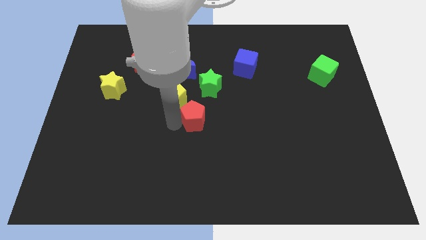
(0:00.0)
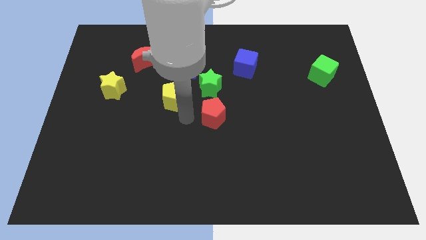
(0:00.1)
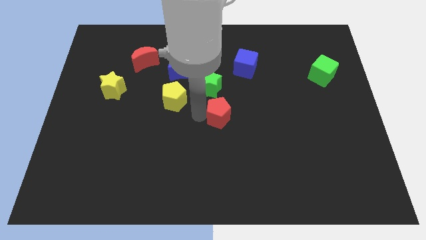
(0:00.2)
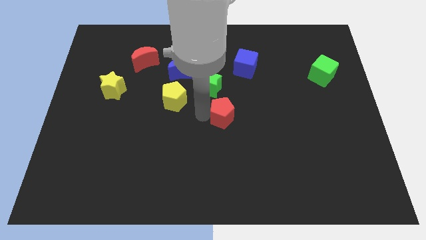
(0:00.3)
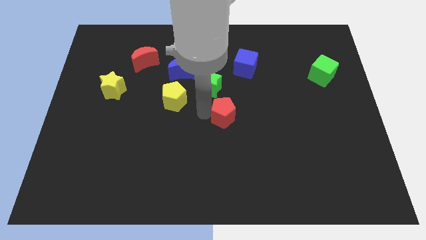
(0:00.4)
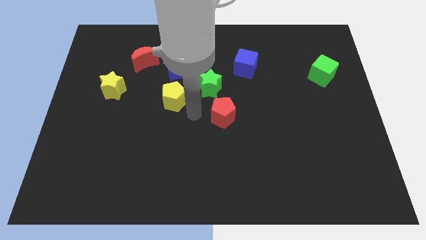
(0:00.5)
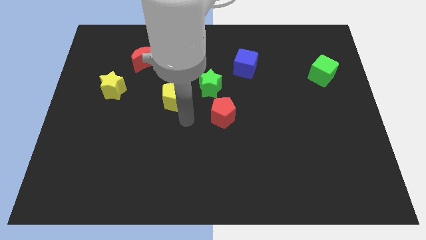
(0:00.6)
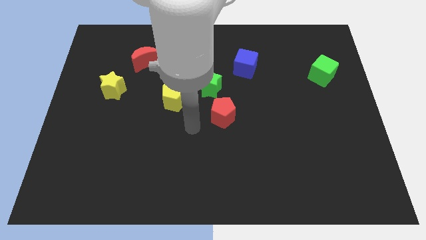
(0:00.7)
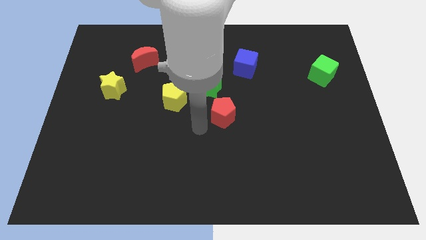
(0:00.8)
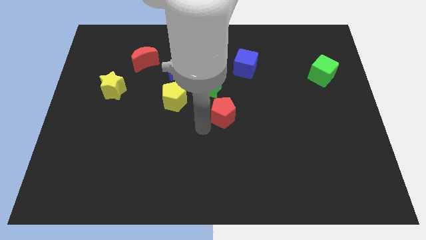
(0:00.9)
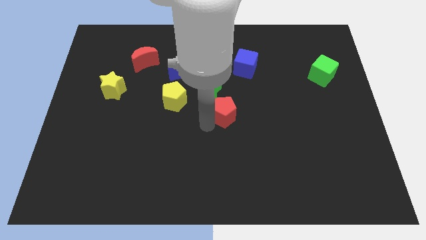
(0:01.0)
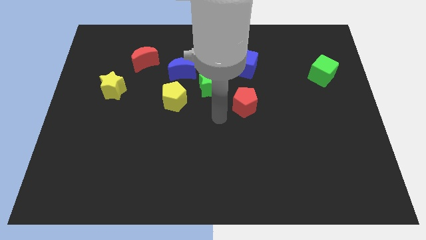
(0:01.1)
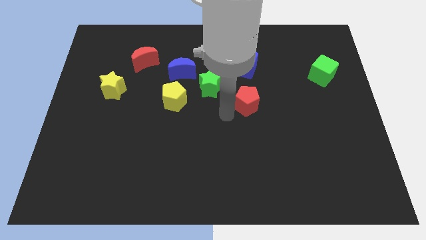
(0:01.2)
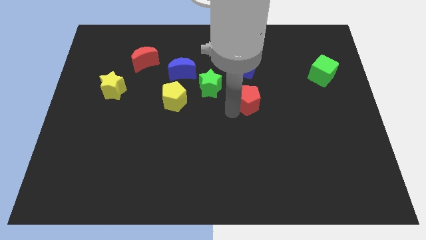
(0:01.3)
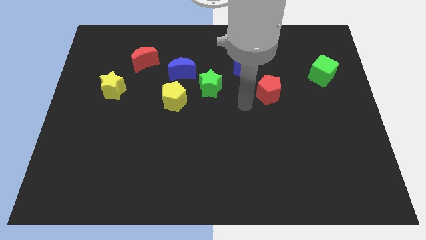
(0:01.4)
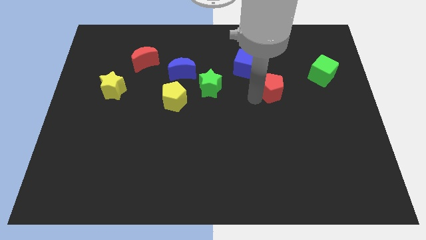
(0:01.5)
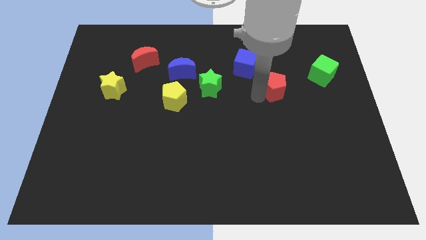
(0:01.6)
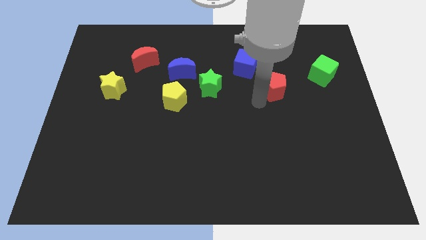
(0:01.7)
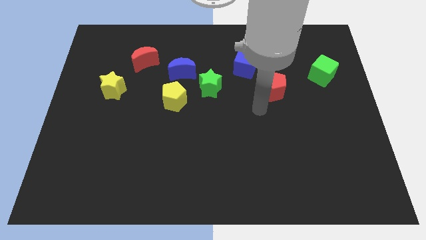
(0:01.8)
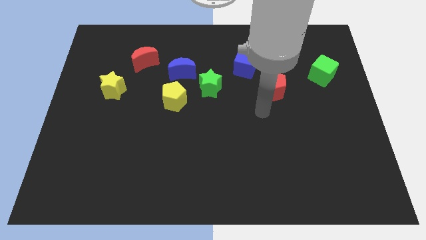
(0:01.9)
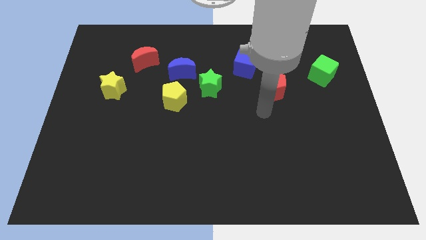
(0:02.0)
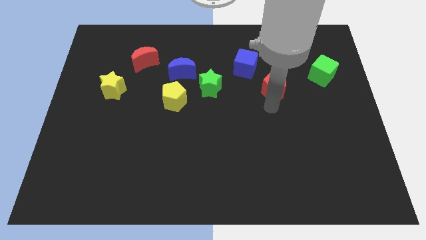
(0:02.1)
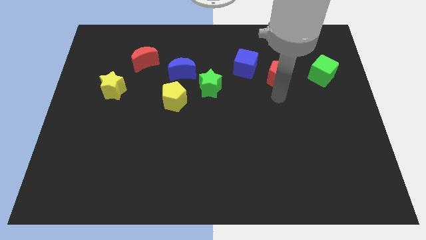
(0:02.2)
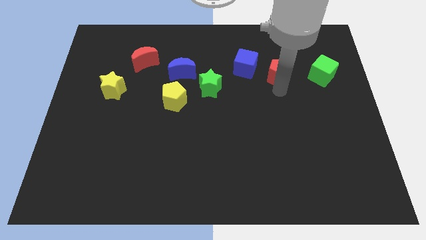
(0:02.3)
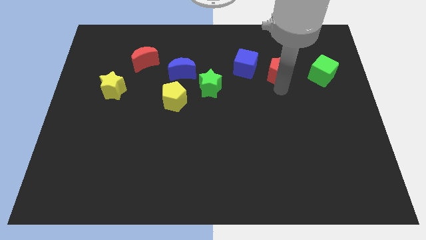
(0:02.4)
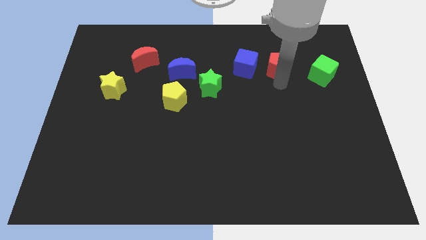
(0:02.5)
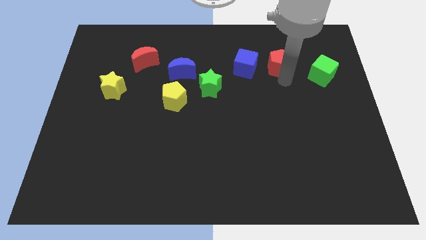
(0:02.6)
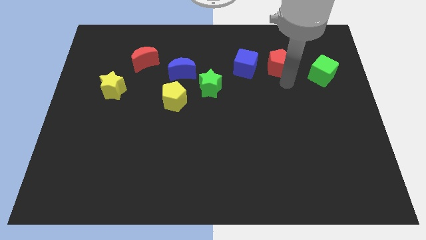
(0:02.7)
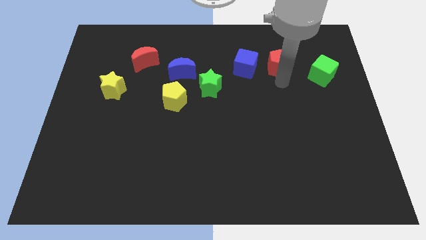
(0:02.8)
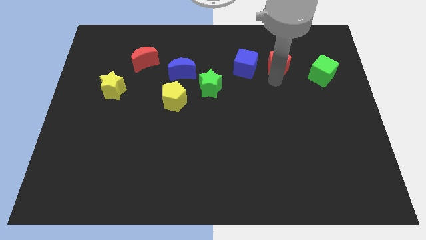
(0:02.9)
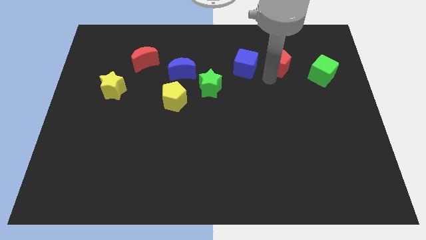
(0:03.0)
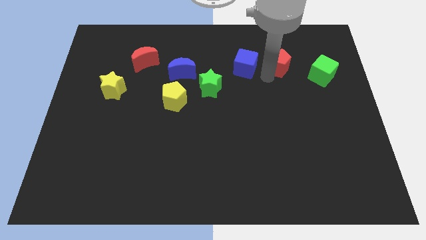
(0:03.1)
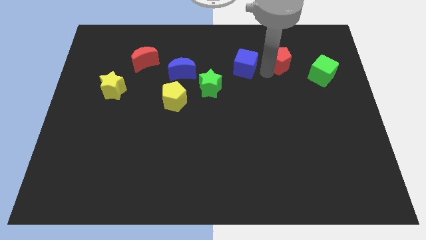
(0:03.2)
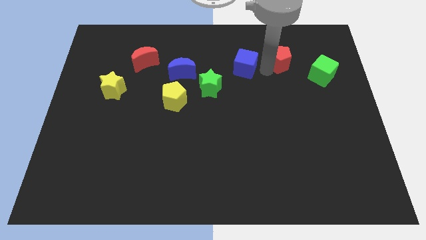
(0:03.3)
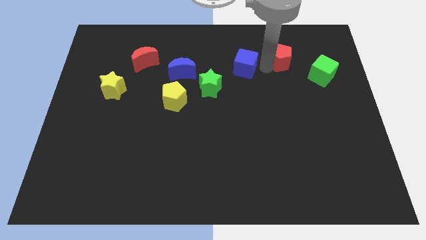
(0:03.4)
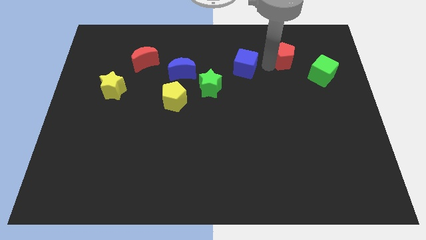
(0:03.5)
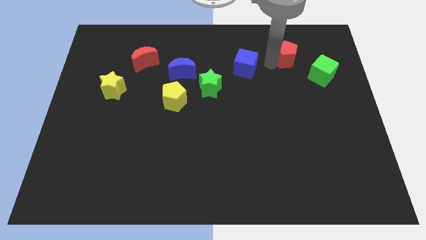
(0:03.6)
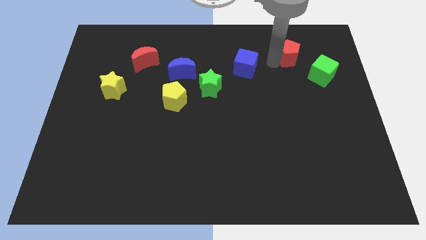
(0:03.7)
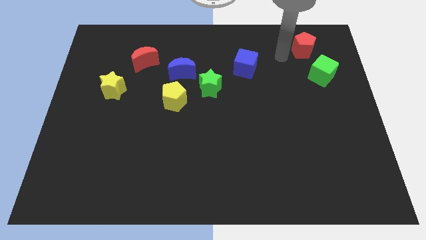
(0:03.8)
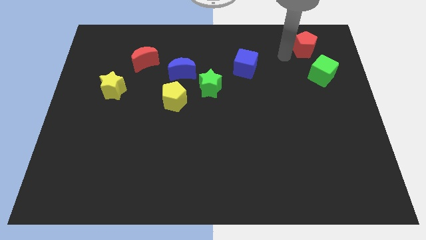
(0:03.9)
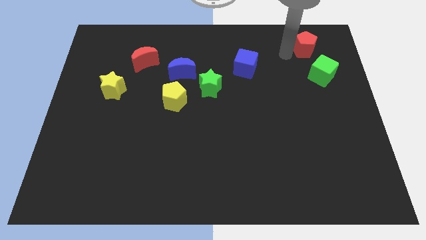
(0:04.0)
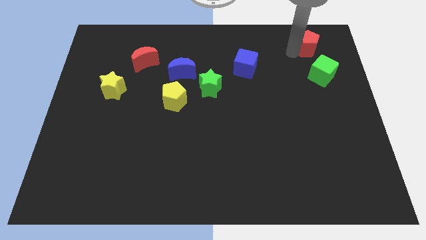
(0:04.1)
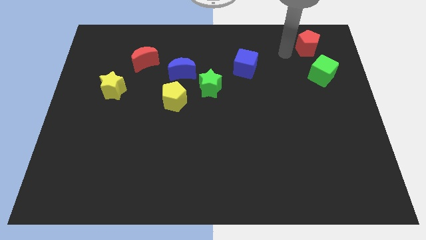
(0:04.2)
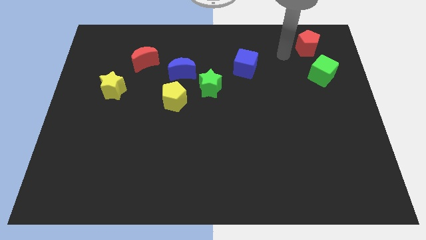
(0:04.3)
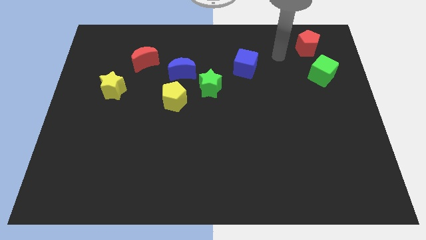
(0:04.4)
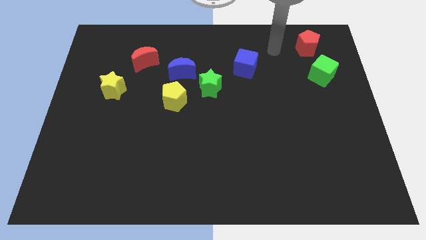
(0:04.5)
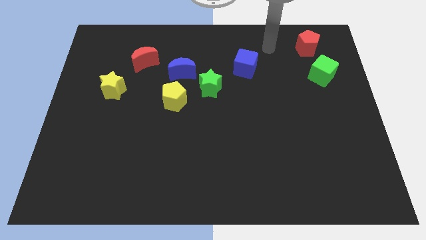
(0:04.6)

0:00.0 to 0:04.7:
place the red pentagon above green cube

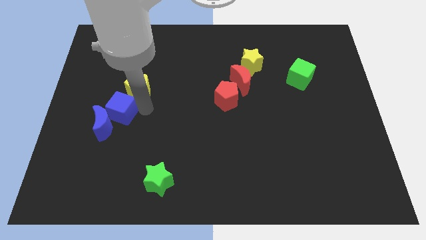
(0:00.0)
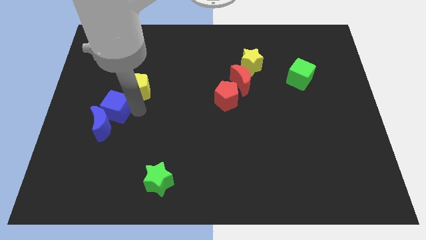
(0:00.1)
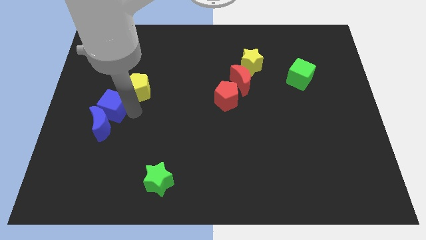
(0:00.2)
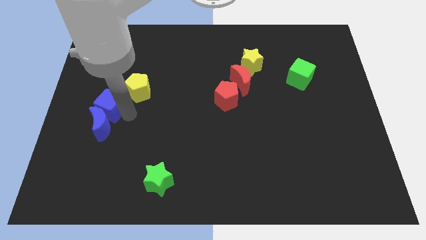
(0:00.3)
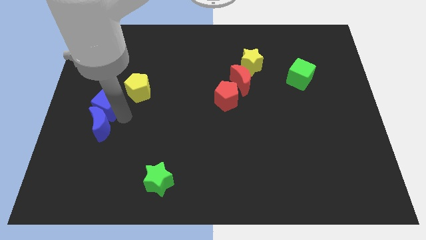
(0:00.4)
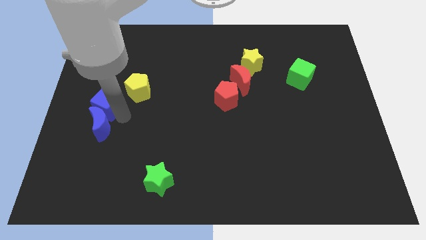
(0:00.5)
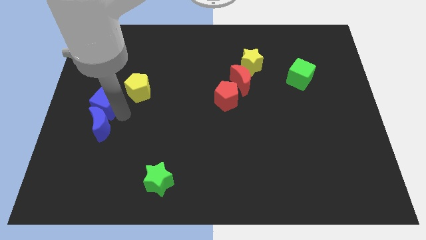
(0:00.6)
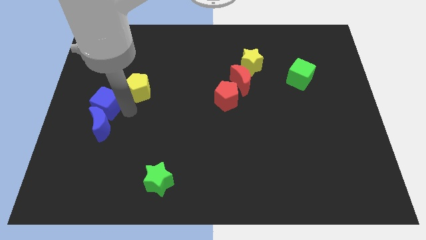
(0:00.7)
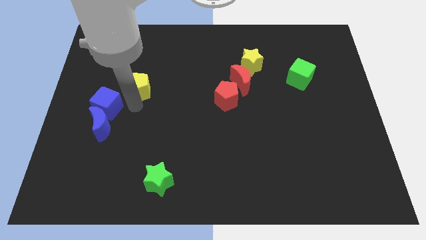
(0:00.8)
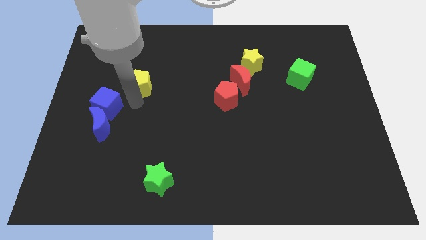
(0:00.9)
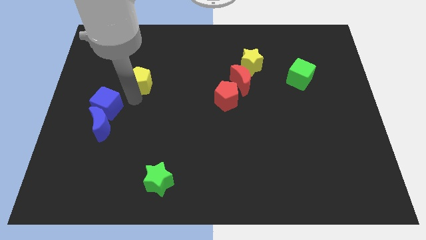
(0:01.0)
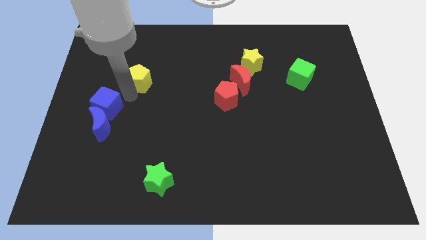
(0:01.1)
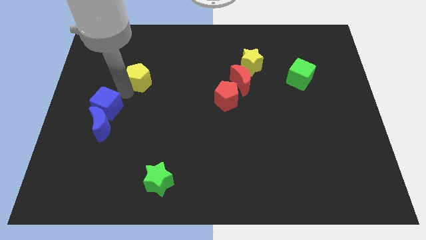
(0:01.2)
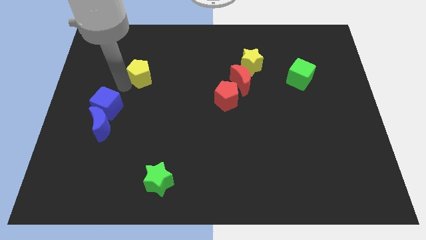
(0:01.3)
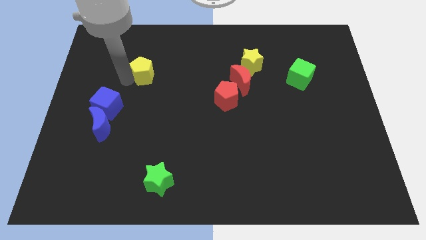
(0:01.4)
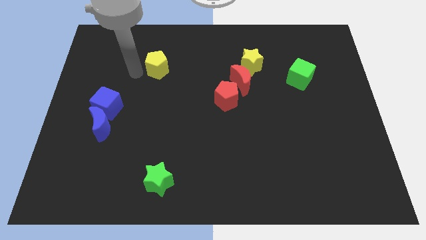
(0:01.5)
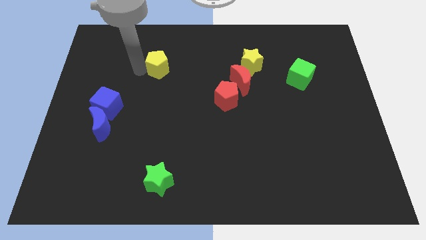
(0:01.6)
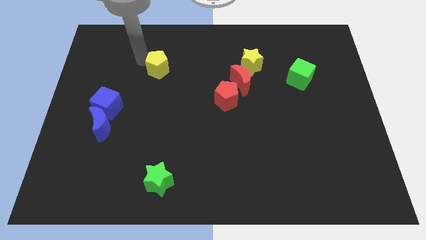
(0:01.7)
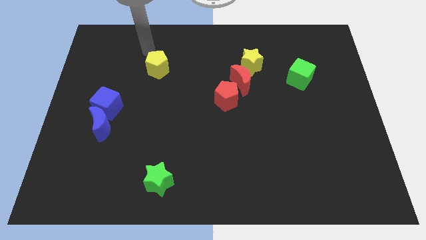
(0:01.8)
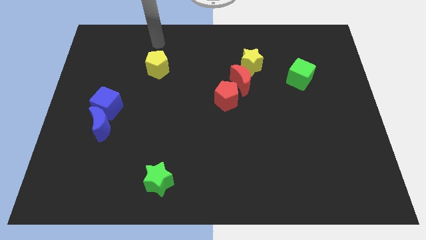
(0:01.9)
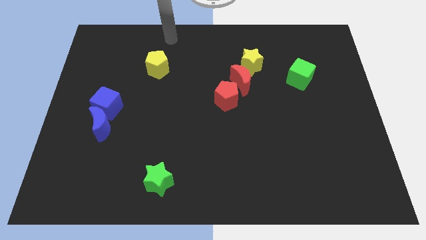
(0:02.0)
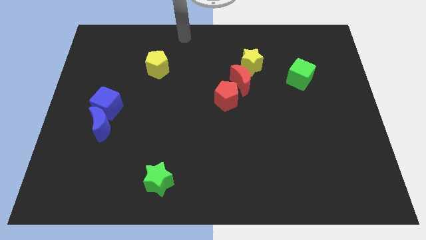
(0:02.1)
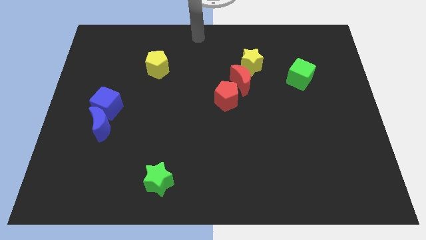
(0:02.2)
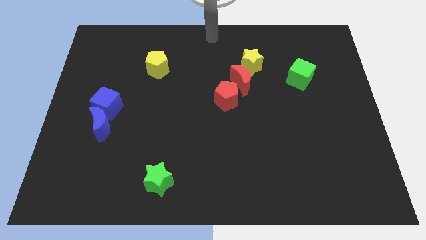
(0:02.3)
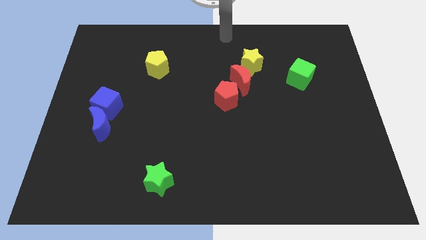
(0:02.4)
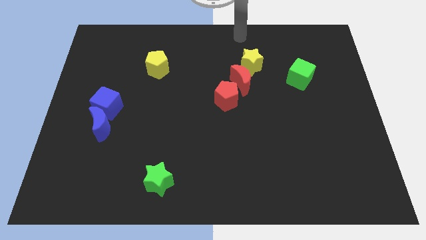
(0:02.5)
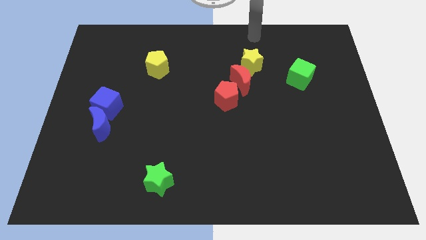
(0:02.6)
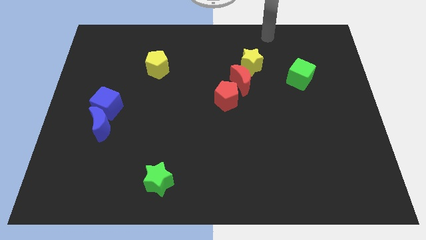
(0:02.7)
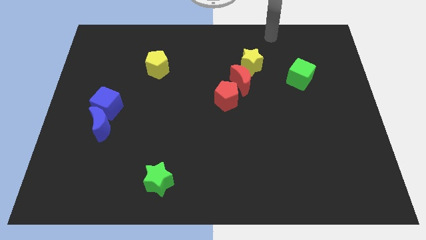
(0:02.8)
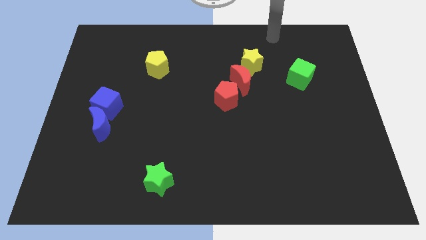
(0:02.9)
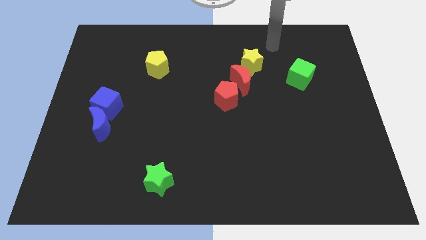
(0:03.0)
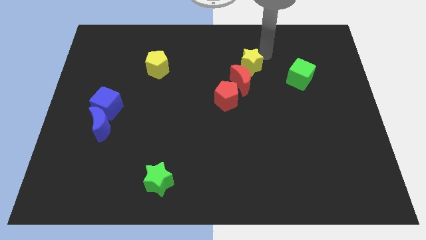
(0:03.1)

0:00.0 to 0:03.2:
move the yellow pentagon away from the blue cube

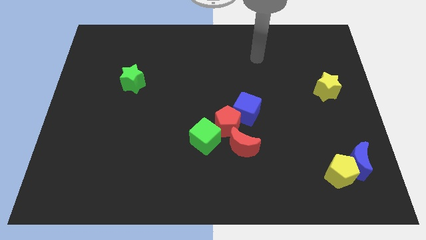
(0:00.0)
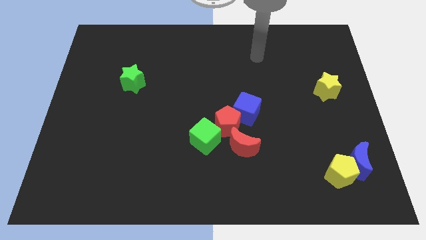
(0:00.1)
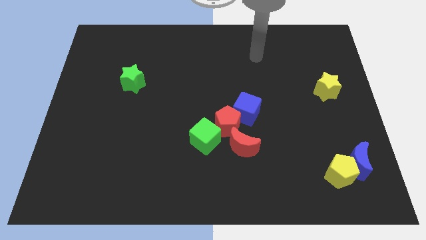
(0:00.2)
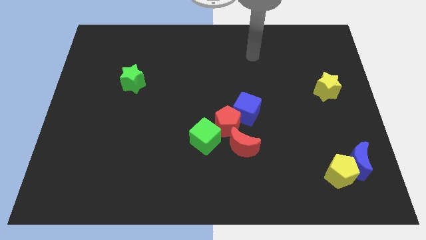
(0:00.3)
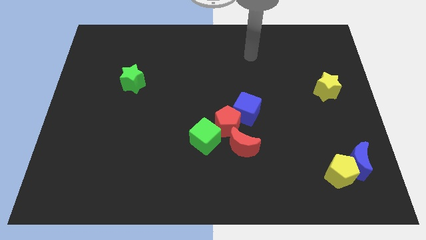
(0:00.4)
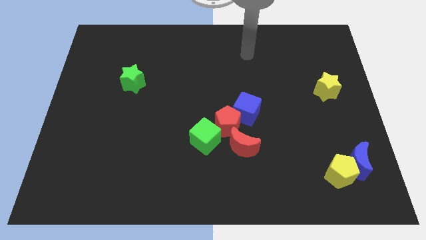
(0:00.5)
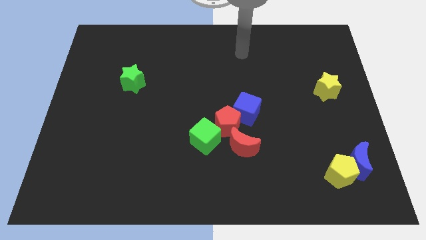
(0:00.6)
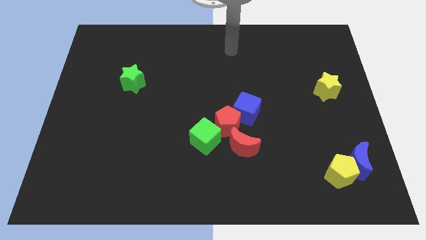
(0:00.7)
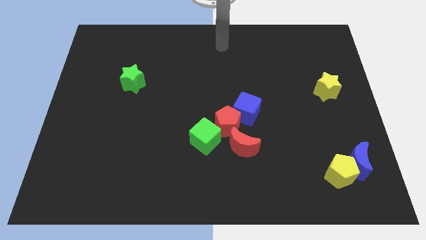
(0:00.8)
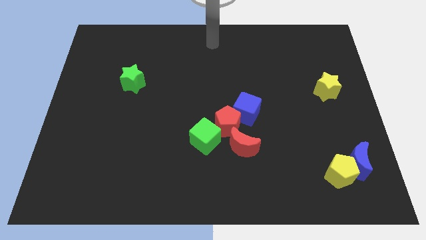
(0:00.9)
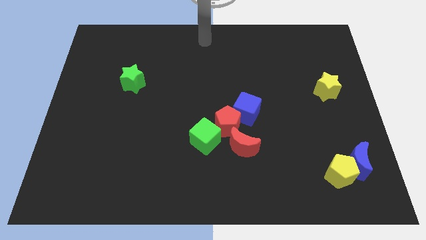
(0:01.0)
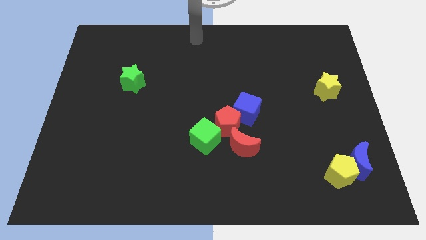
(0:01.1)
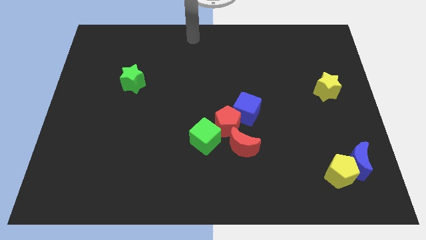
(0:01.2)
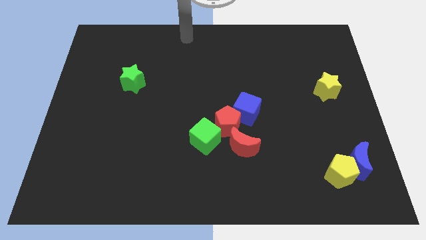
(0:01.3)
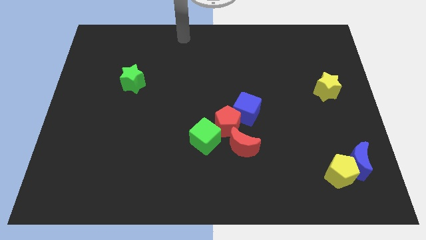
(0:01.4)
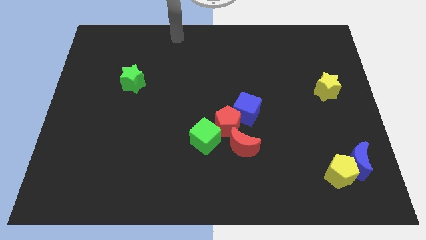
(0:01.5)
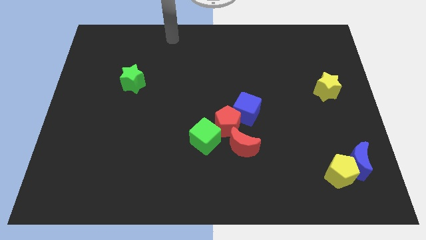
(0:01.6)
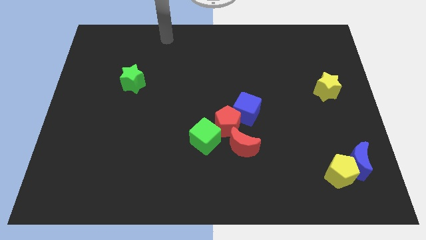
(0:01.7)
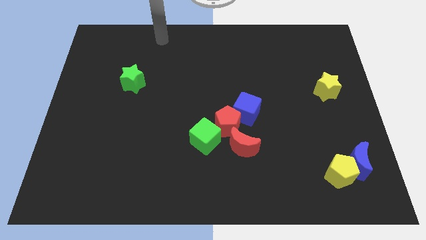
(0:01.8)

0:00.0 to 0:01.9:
move your hand towards the top left
